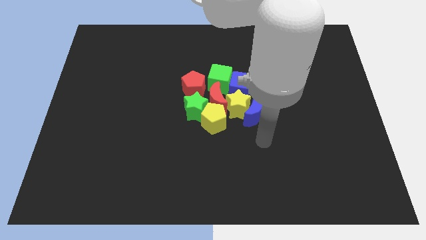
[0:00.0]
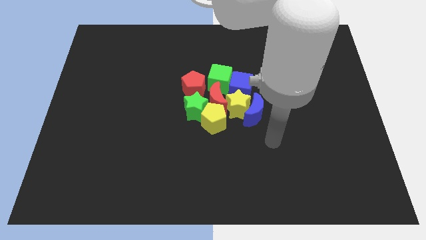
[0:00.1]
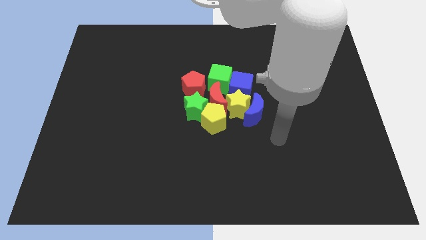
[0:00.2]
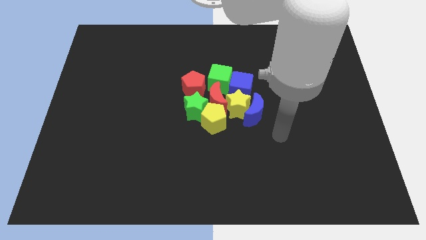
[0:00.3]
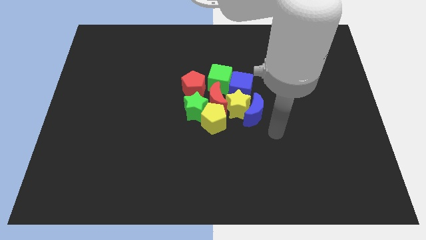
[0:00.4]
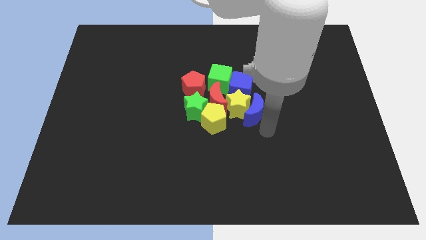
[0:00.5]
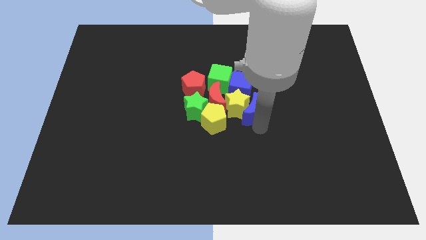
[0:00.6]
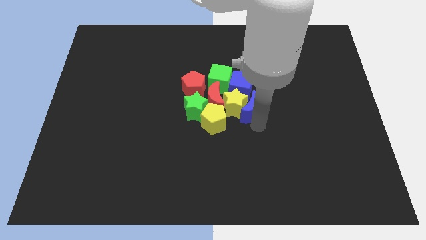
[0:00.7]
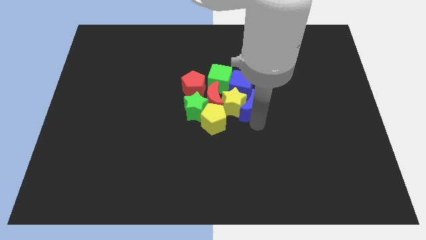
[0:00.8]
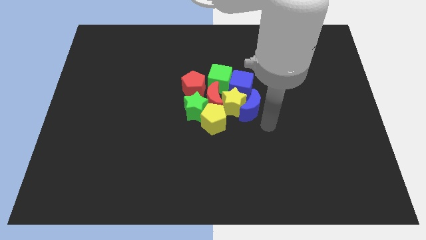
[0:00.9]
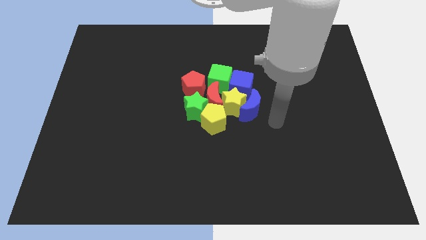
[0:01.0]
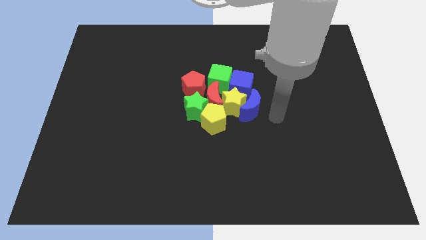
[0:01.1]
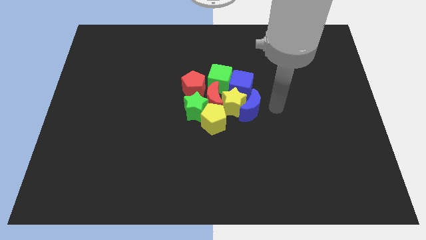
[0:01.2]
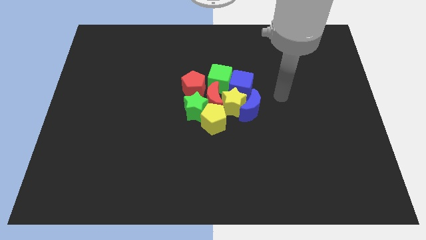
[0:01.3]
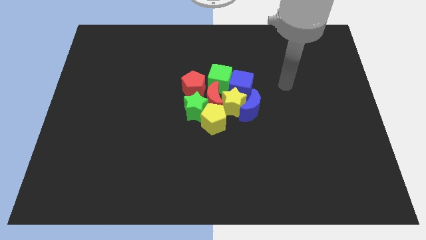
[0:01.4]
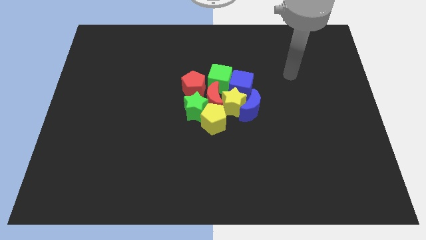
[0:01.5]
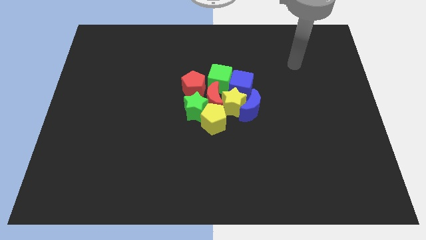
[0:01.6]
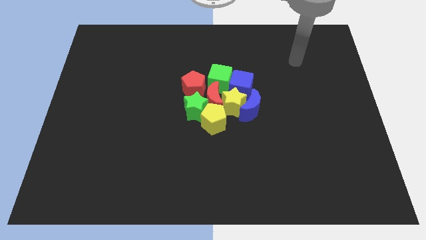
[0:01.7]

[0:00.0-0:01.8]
move arm away from all blocks

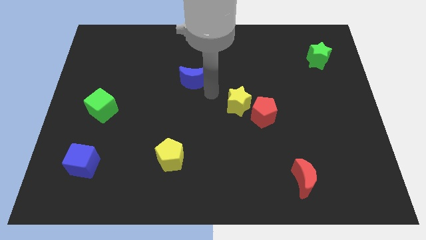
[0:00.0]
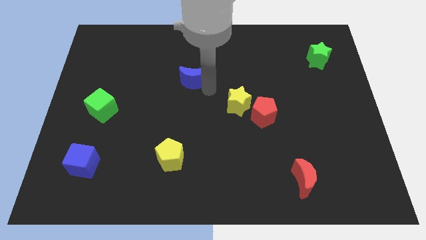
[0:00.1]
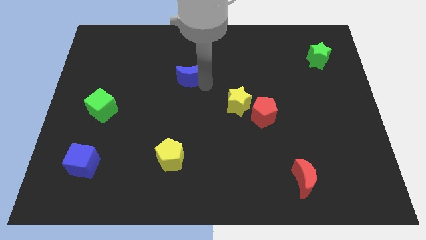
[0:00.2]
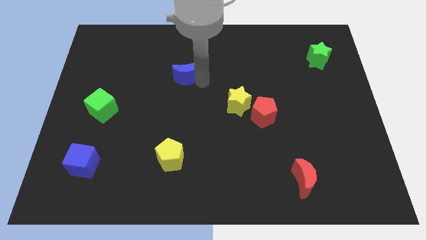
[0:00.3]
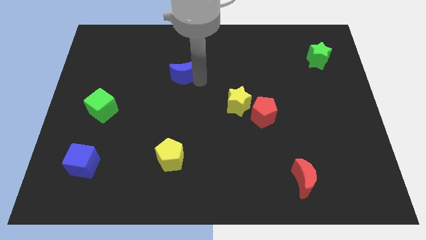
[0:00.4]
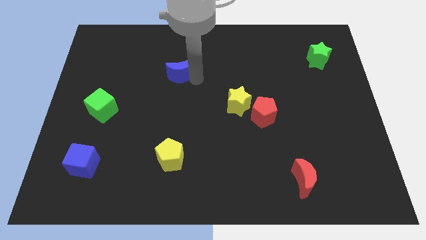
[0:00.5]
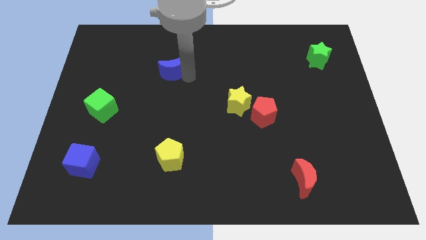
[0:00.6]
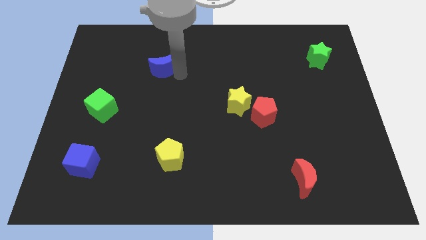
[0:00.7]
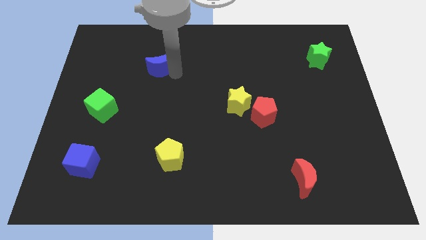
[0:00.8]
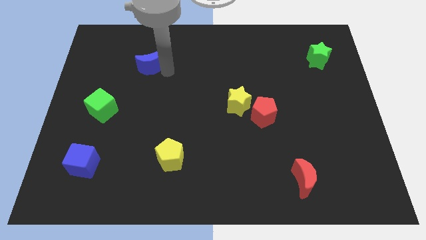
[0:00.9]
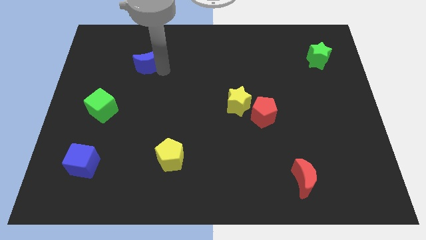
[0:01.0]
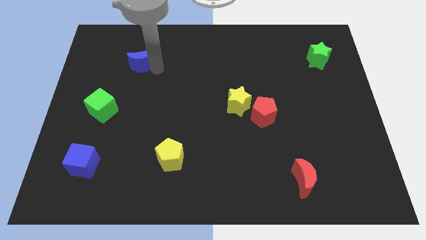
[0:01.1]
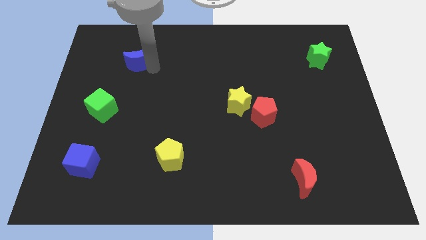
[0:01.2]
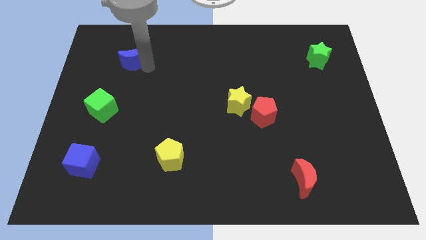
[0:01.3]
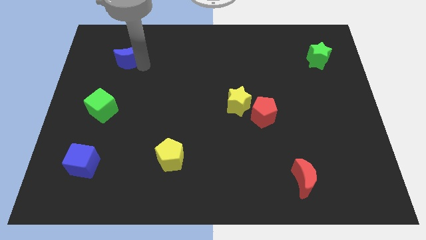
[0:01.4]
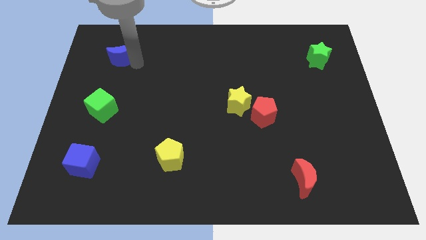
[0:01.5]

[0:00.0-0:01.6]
move blue moon to the left side of the board

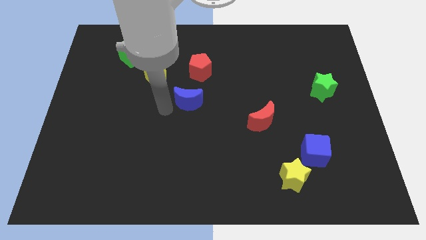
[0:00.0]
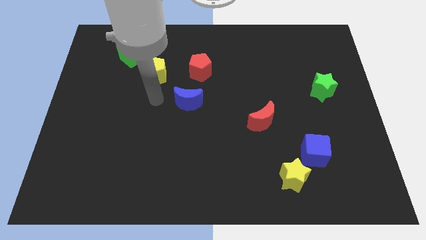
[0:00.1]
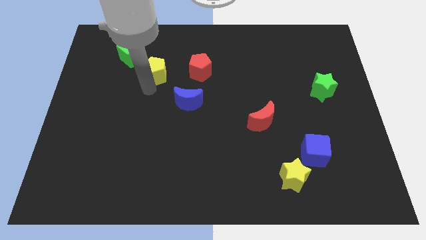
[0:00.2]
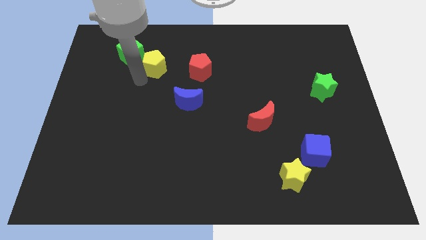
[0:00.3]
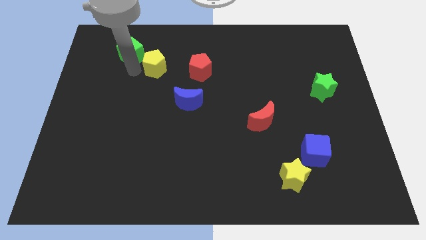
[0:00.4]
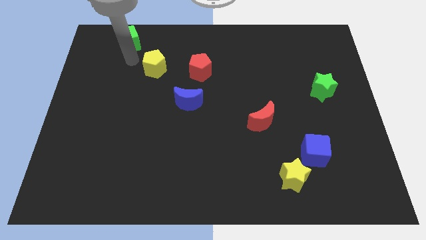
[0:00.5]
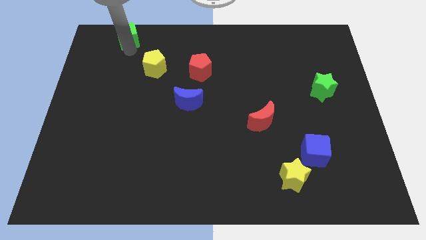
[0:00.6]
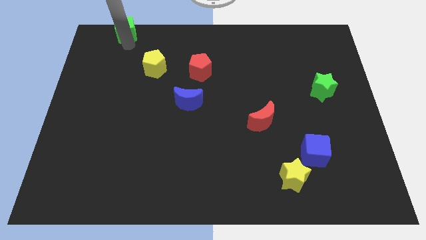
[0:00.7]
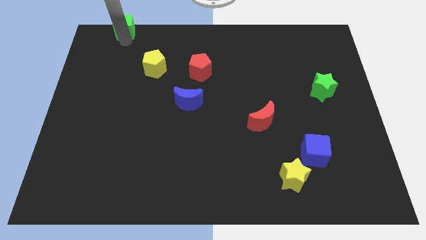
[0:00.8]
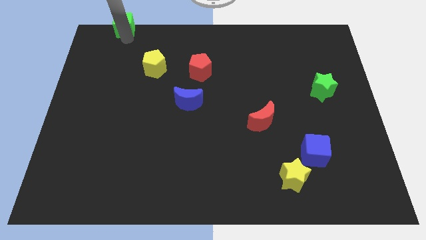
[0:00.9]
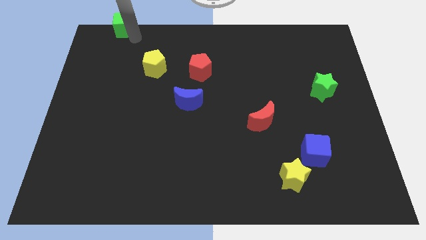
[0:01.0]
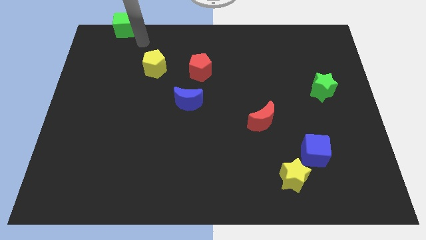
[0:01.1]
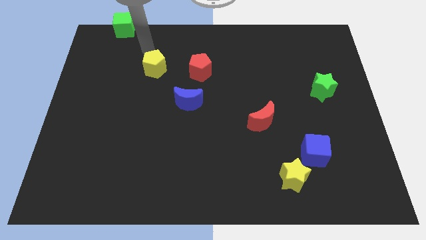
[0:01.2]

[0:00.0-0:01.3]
push the green cube upwards

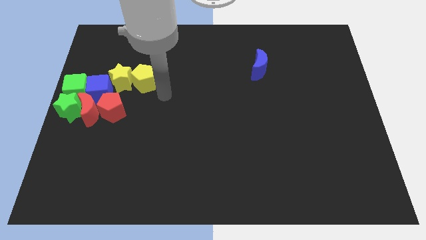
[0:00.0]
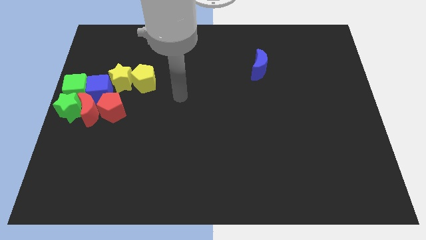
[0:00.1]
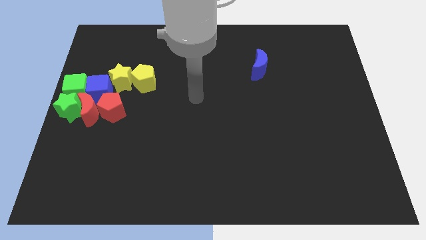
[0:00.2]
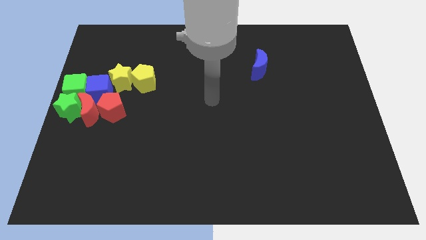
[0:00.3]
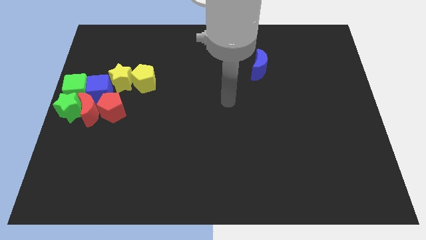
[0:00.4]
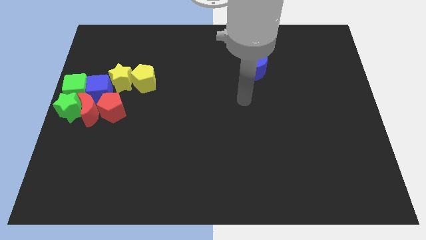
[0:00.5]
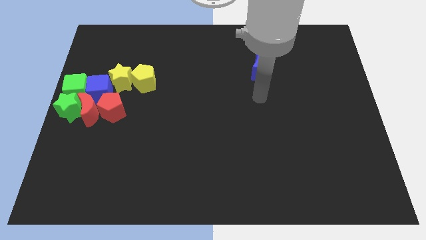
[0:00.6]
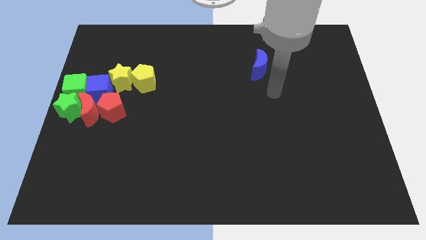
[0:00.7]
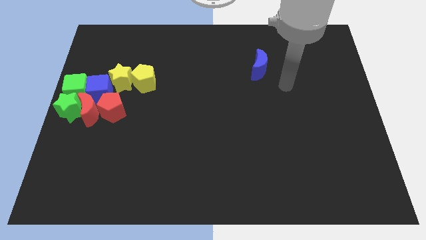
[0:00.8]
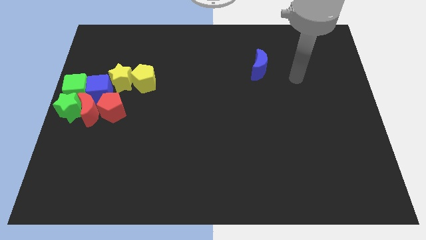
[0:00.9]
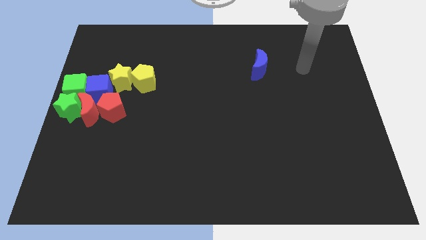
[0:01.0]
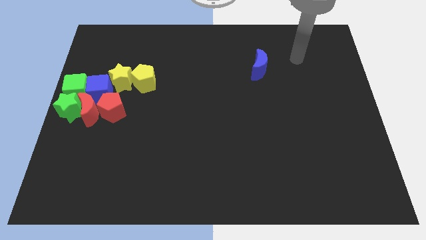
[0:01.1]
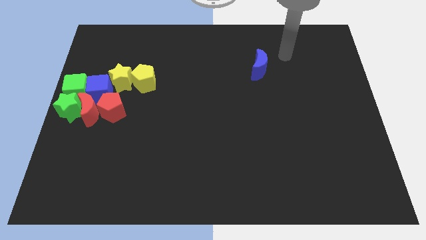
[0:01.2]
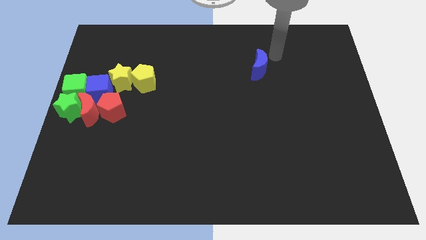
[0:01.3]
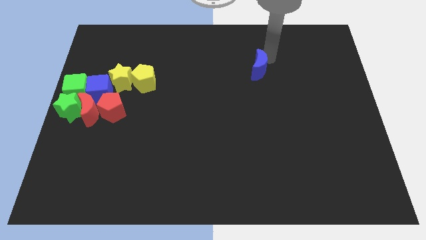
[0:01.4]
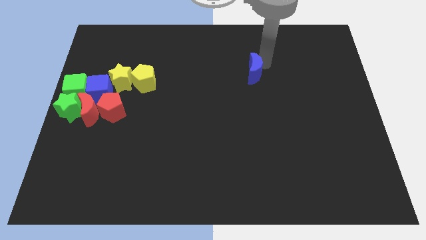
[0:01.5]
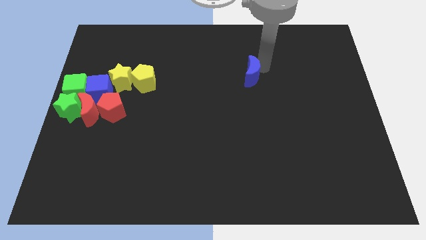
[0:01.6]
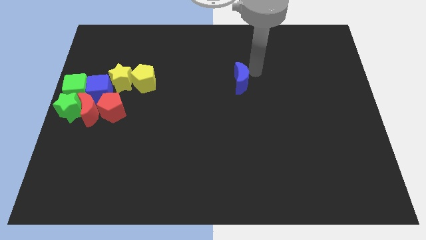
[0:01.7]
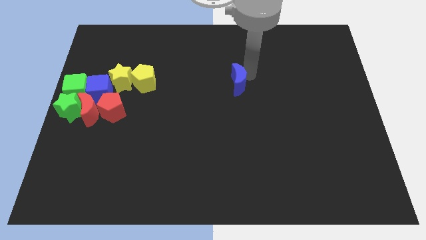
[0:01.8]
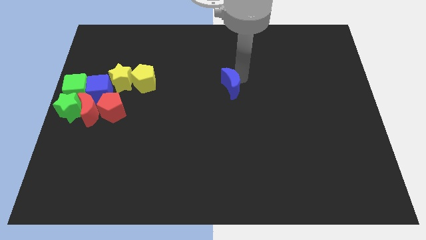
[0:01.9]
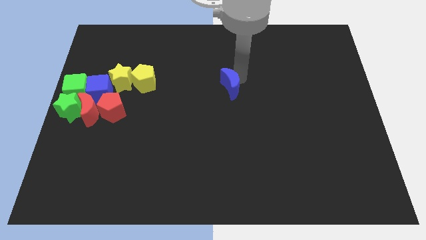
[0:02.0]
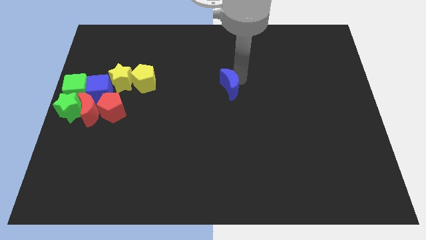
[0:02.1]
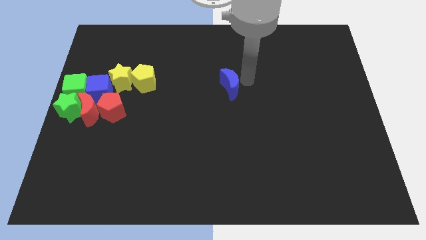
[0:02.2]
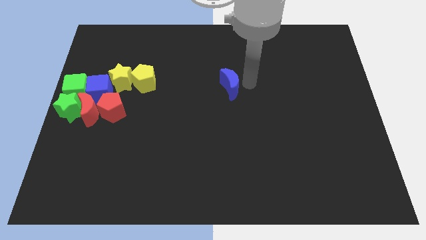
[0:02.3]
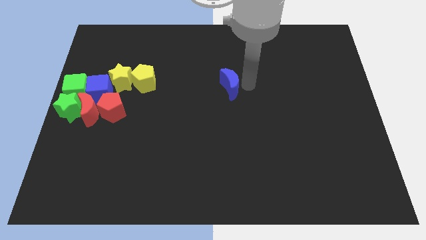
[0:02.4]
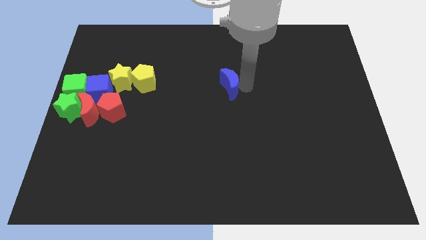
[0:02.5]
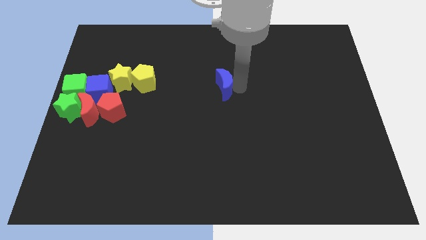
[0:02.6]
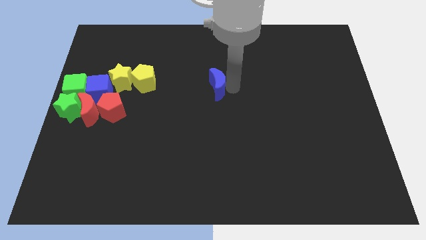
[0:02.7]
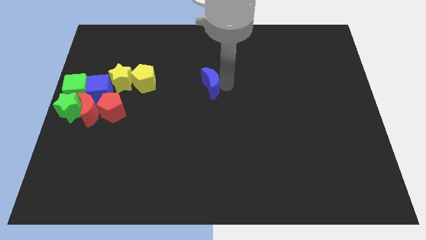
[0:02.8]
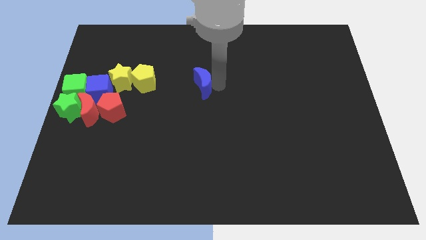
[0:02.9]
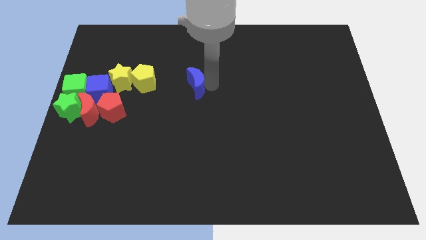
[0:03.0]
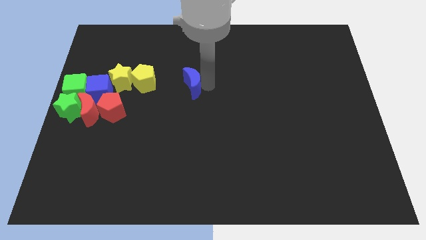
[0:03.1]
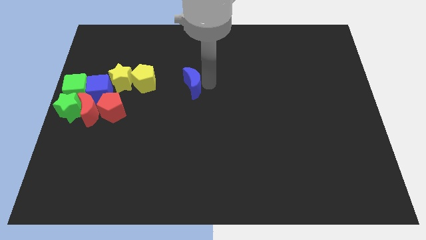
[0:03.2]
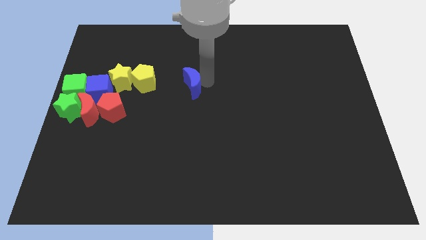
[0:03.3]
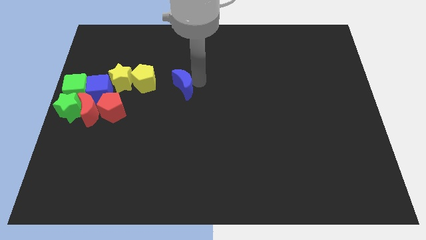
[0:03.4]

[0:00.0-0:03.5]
push the blue crescent to the right of the yellow pentagon

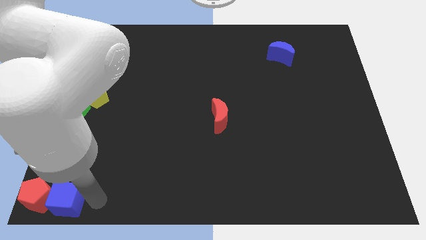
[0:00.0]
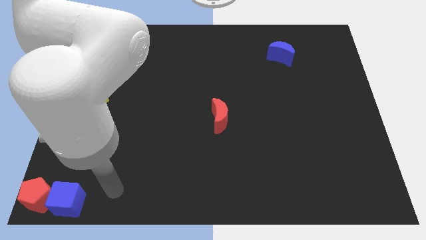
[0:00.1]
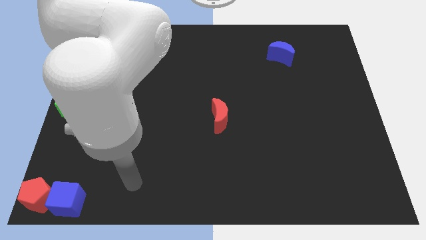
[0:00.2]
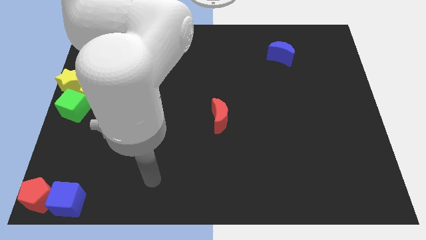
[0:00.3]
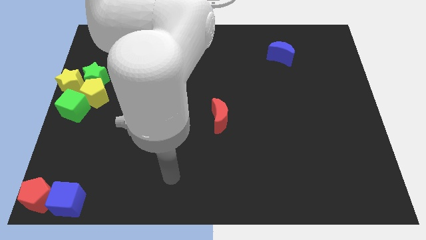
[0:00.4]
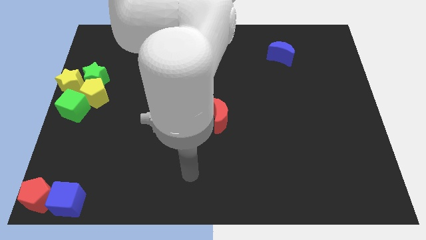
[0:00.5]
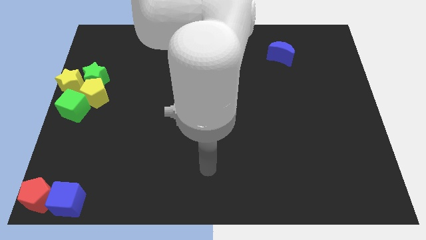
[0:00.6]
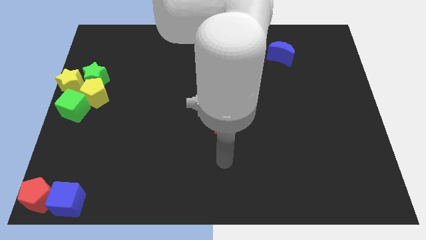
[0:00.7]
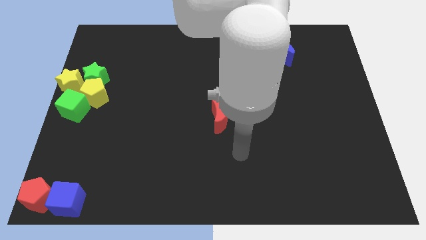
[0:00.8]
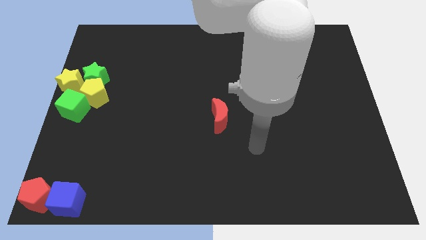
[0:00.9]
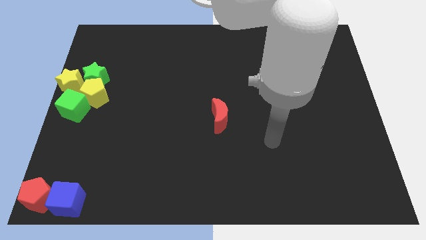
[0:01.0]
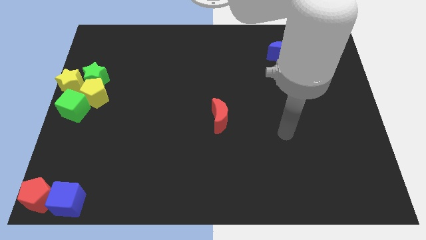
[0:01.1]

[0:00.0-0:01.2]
move your arm away from the blue cube
